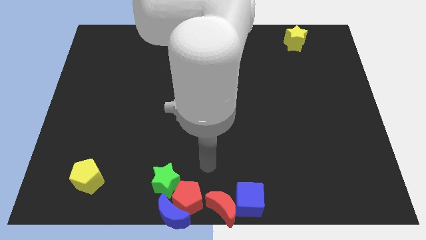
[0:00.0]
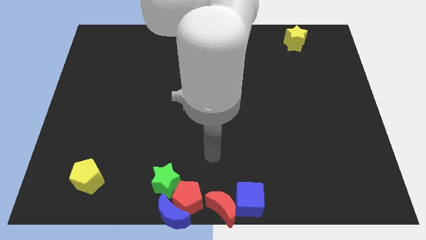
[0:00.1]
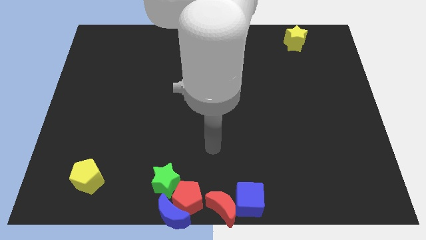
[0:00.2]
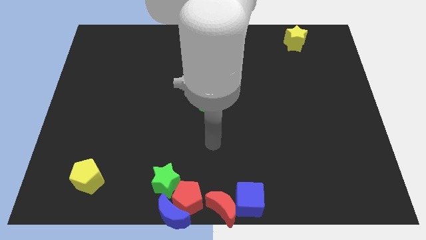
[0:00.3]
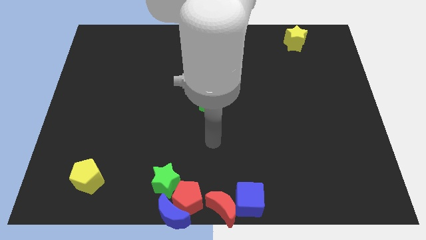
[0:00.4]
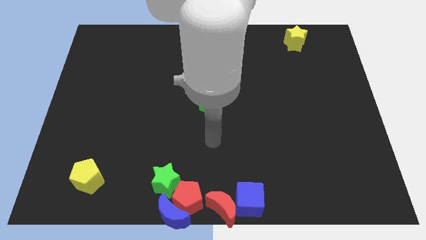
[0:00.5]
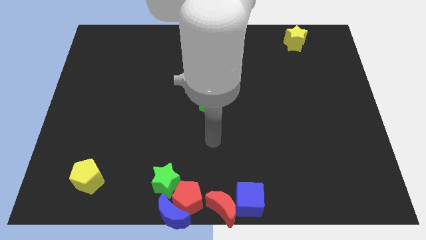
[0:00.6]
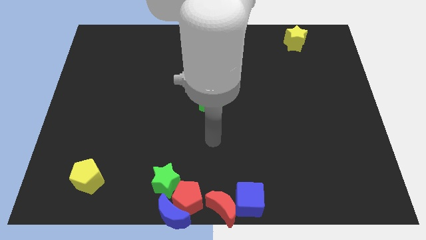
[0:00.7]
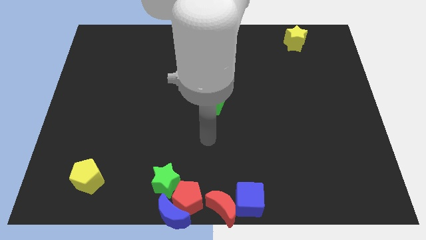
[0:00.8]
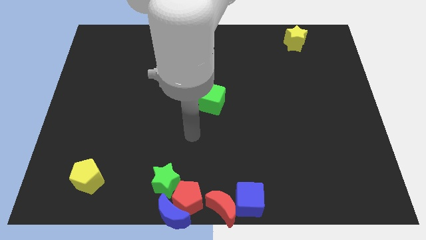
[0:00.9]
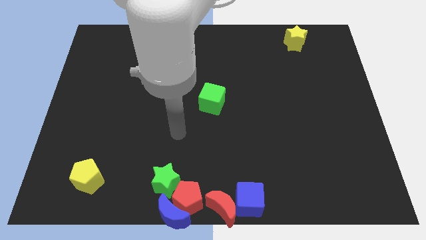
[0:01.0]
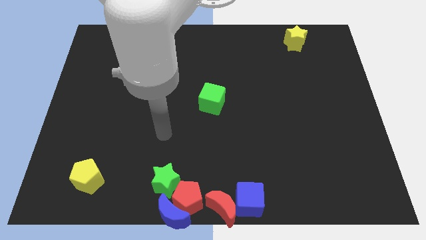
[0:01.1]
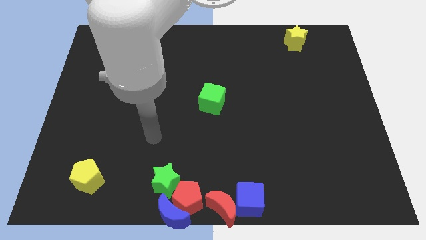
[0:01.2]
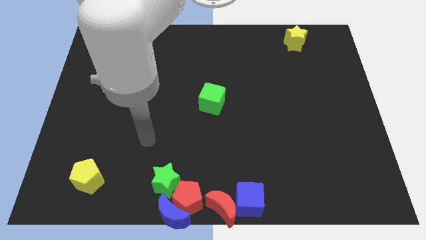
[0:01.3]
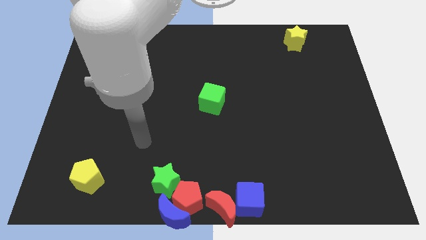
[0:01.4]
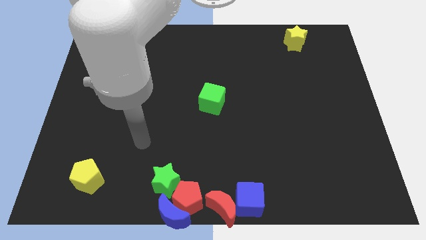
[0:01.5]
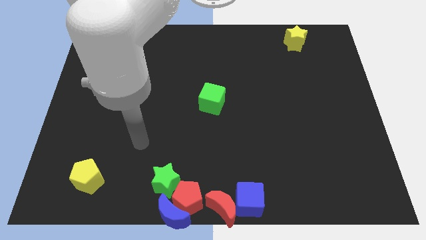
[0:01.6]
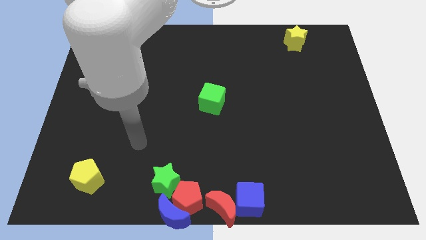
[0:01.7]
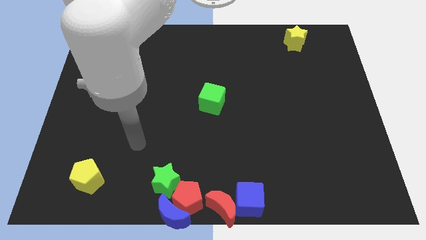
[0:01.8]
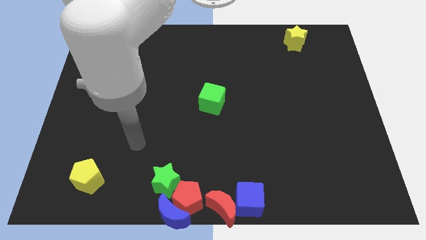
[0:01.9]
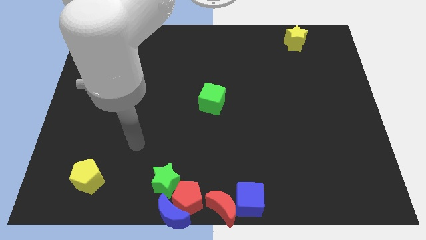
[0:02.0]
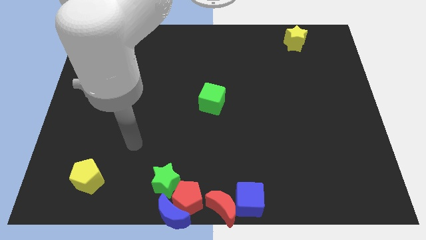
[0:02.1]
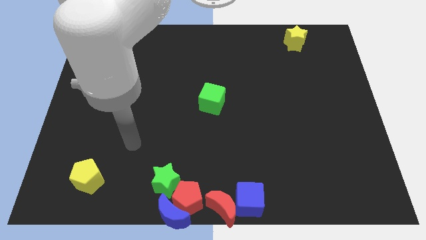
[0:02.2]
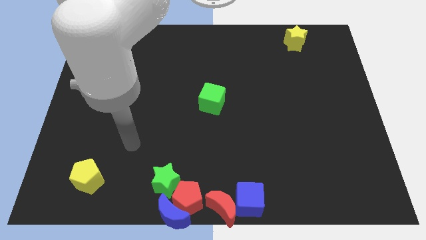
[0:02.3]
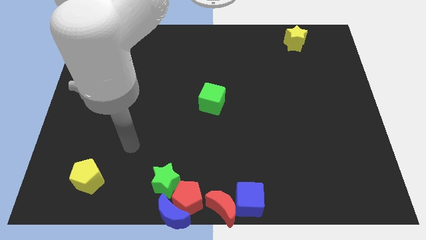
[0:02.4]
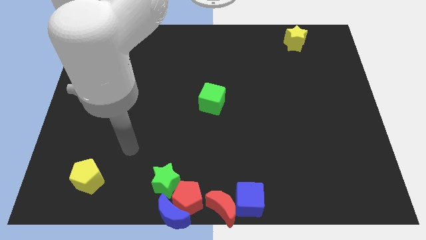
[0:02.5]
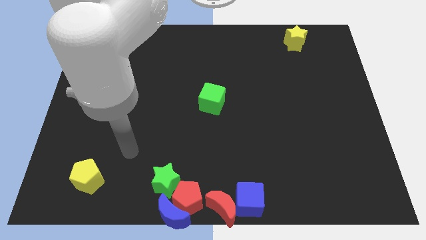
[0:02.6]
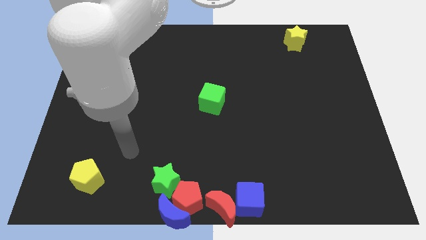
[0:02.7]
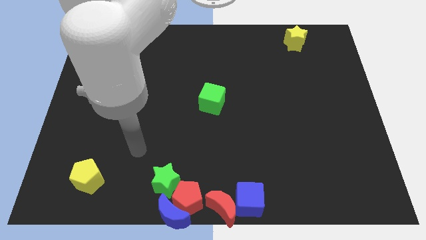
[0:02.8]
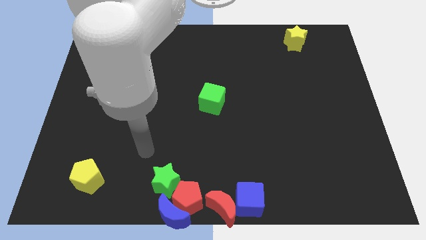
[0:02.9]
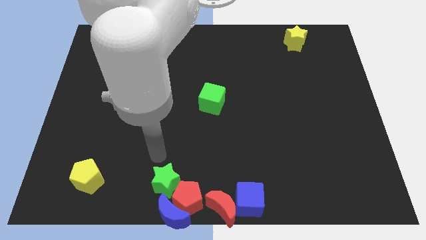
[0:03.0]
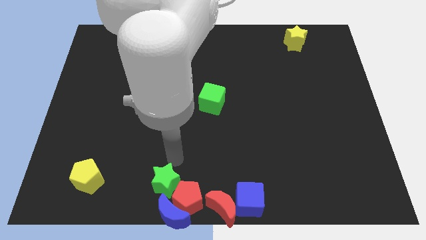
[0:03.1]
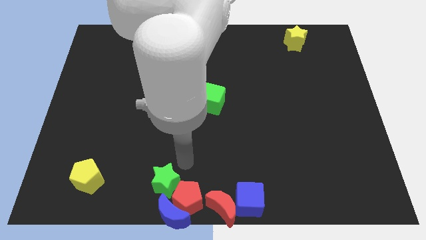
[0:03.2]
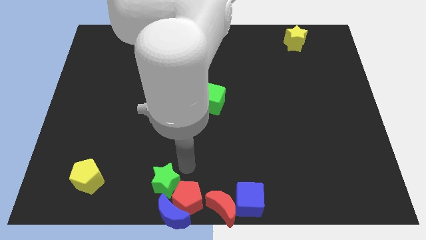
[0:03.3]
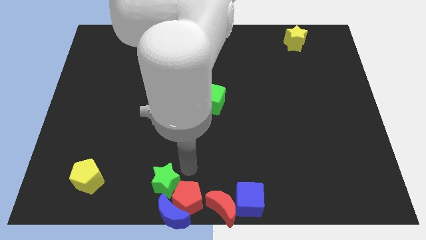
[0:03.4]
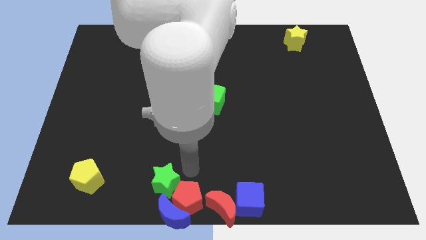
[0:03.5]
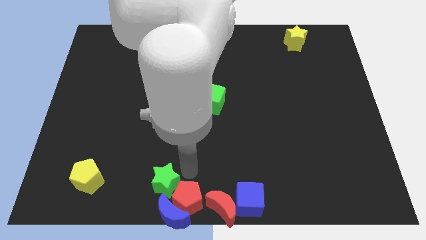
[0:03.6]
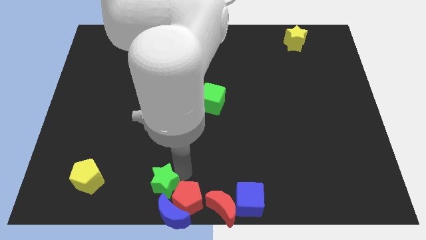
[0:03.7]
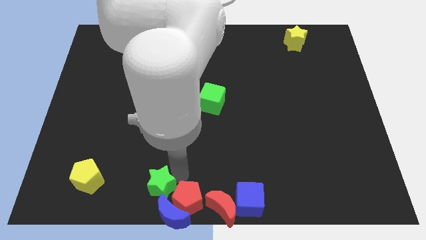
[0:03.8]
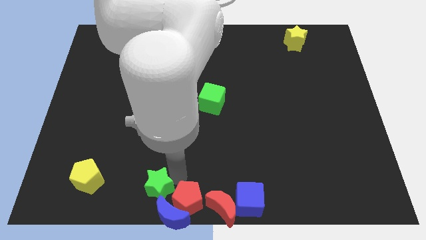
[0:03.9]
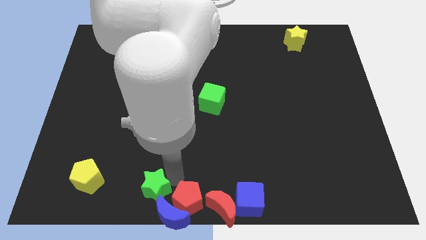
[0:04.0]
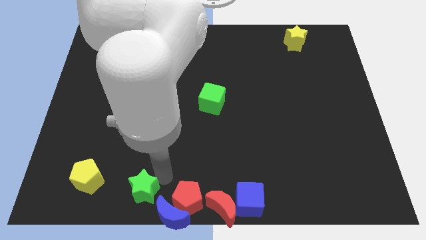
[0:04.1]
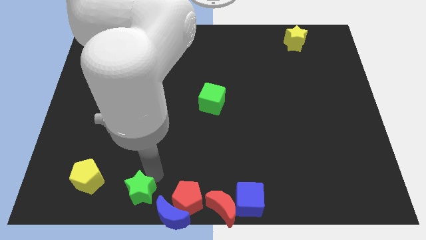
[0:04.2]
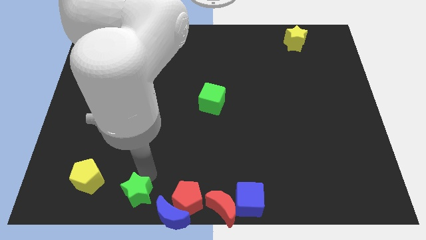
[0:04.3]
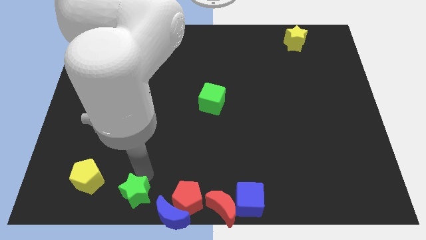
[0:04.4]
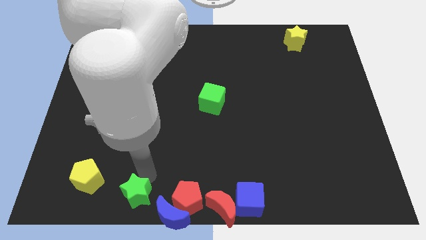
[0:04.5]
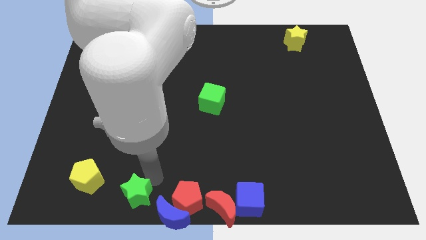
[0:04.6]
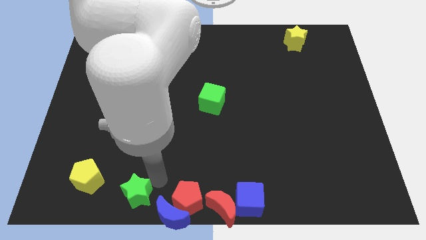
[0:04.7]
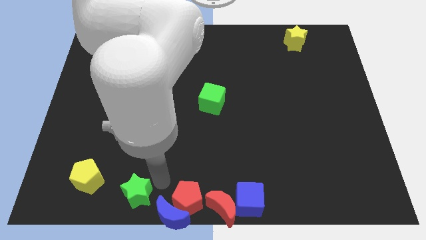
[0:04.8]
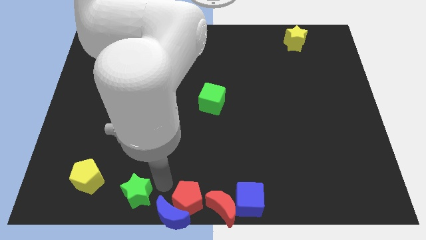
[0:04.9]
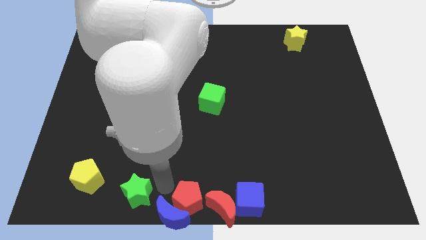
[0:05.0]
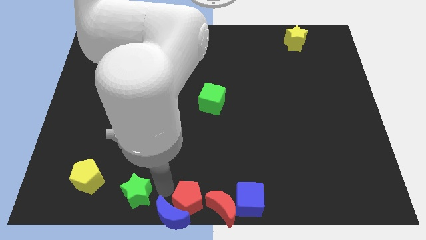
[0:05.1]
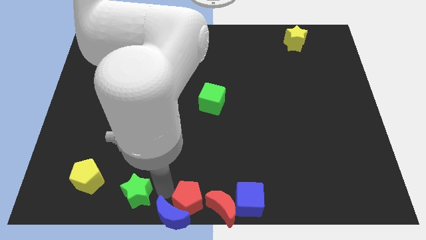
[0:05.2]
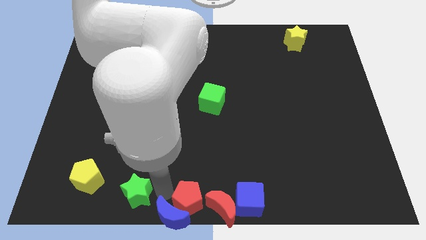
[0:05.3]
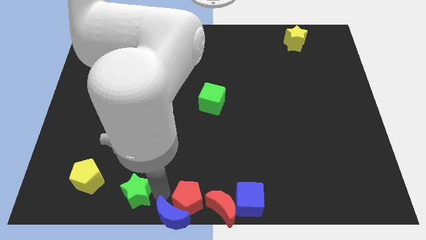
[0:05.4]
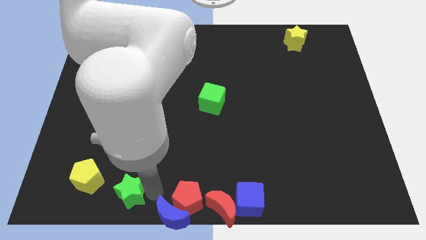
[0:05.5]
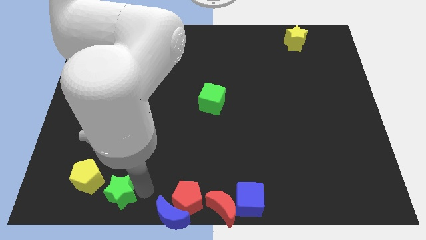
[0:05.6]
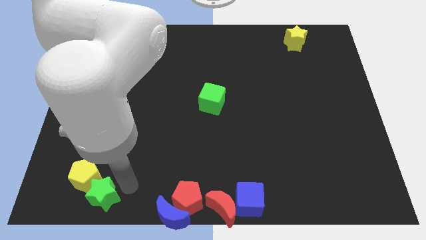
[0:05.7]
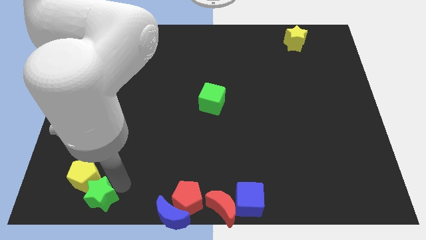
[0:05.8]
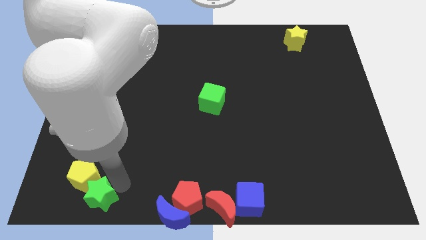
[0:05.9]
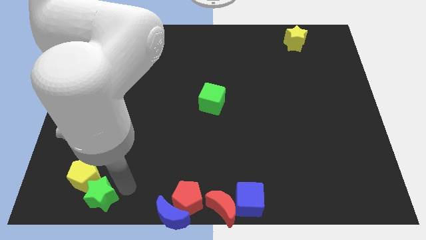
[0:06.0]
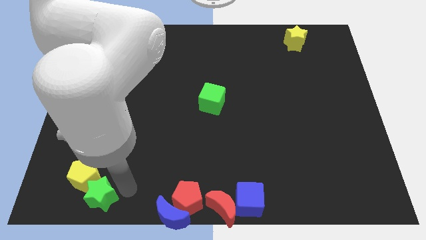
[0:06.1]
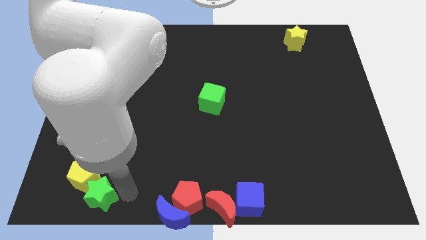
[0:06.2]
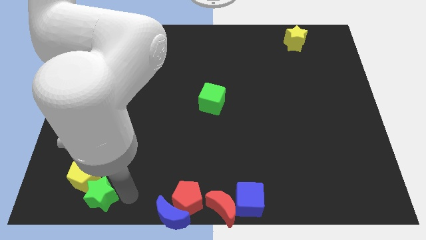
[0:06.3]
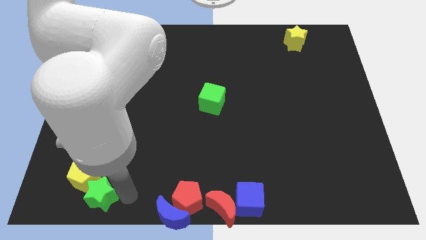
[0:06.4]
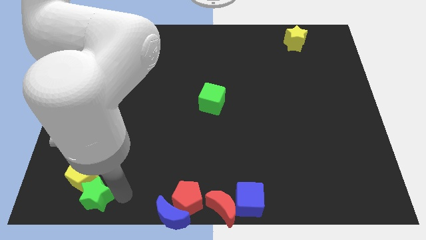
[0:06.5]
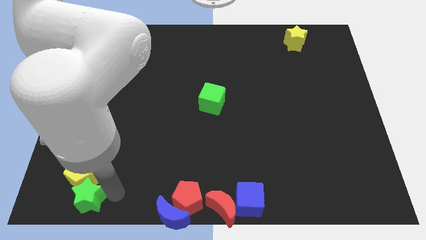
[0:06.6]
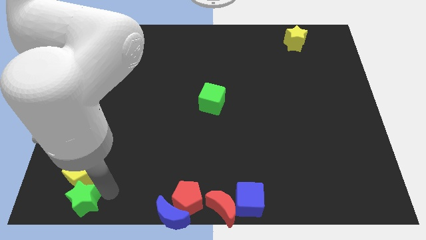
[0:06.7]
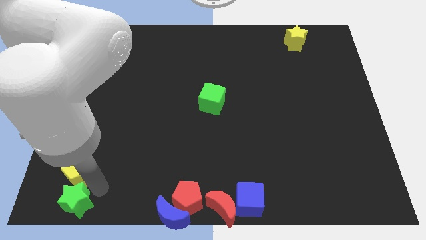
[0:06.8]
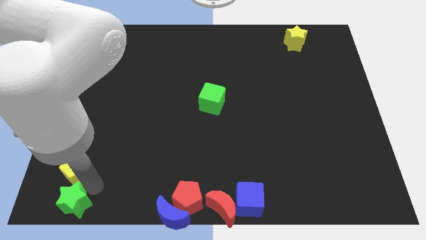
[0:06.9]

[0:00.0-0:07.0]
move the green star to the bottom side of the yellow pentagon

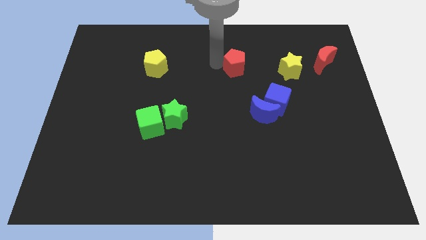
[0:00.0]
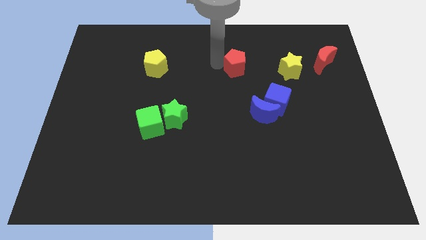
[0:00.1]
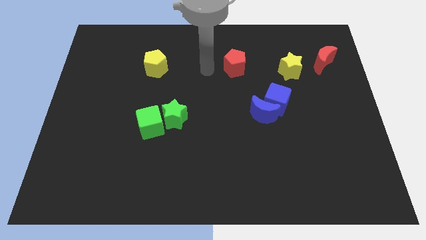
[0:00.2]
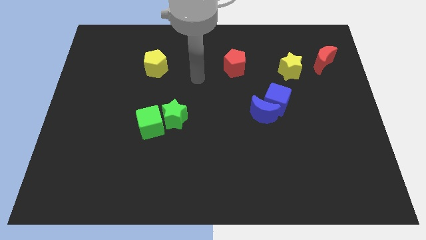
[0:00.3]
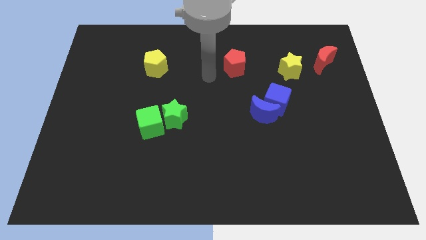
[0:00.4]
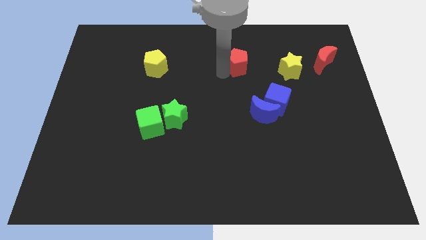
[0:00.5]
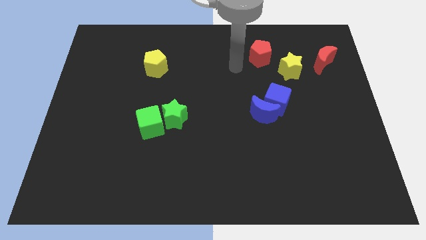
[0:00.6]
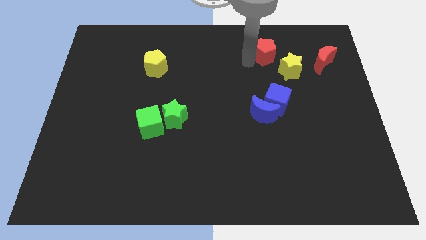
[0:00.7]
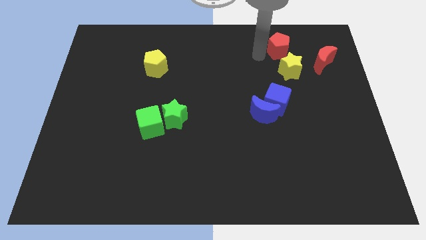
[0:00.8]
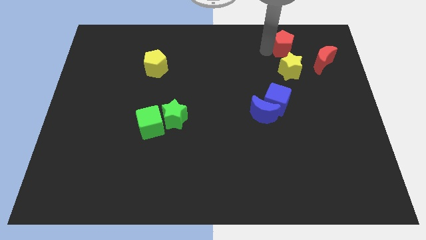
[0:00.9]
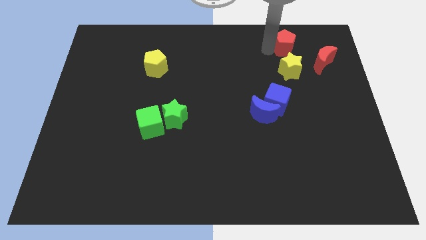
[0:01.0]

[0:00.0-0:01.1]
place the red pentagon above the yellow star

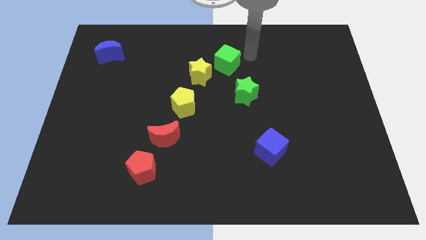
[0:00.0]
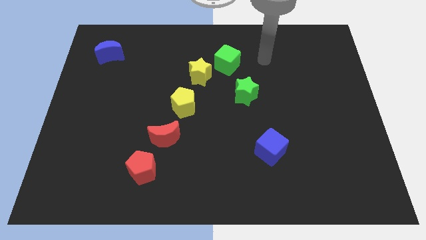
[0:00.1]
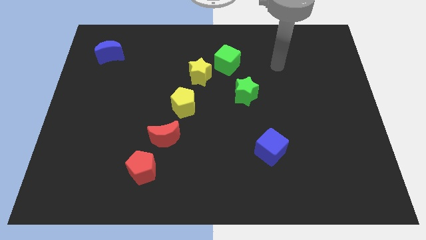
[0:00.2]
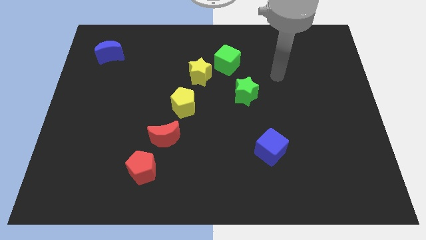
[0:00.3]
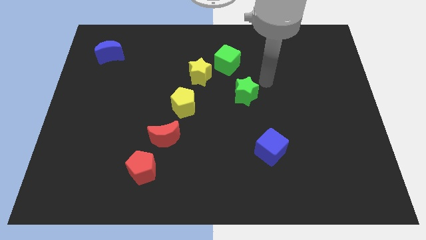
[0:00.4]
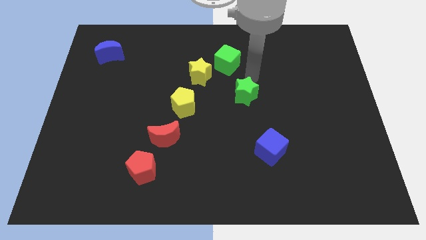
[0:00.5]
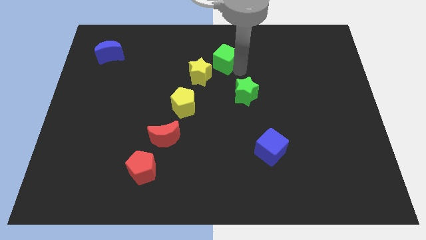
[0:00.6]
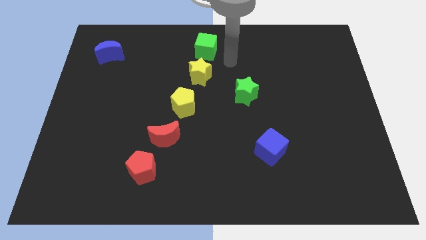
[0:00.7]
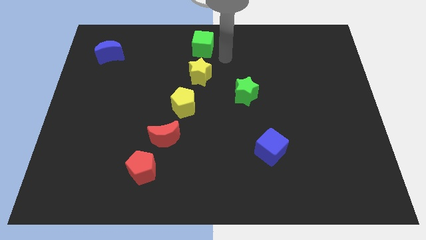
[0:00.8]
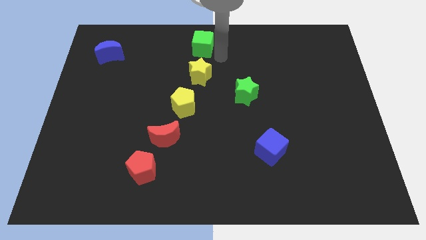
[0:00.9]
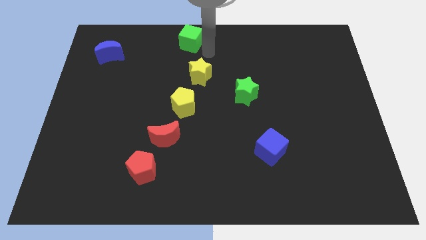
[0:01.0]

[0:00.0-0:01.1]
slide green cube to the top left of yellow star
